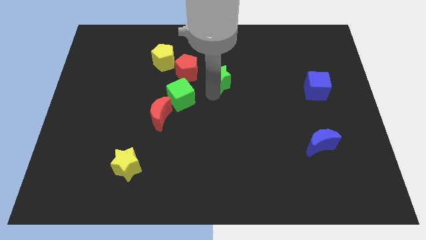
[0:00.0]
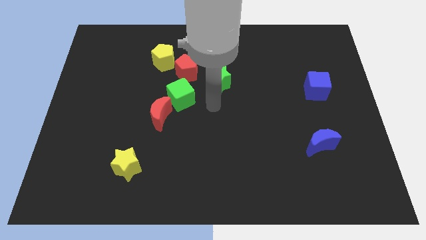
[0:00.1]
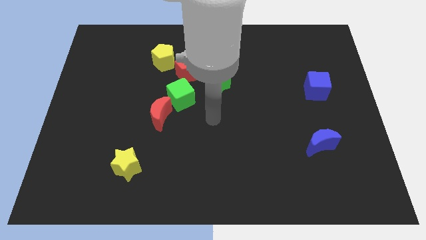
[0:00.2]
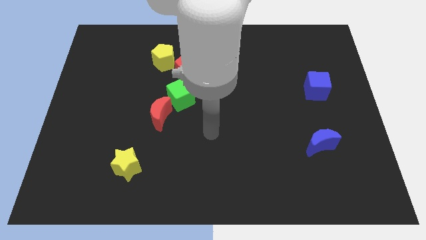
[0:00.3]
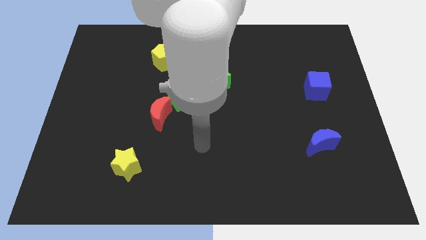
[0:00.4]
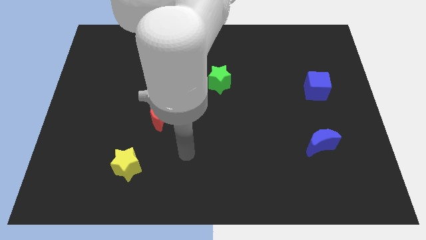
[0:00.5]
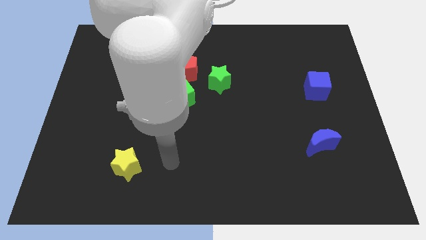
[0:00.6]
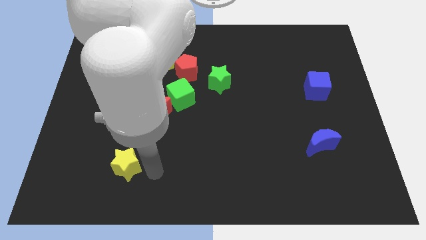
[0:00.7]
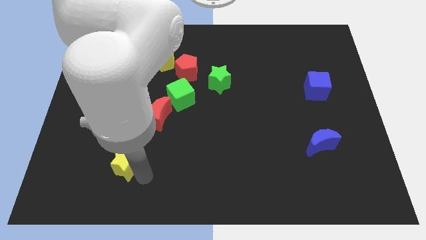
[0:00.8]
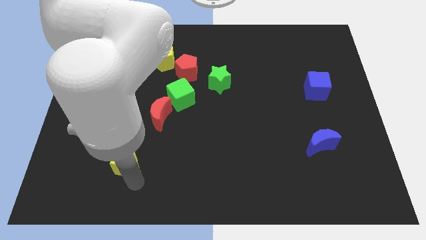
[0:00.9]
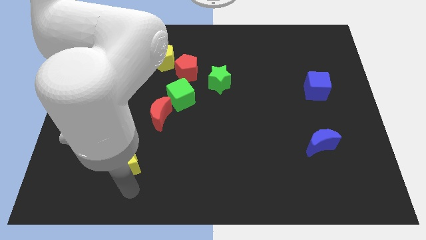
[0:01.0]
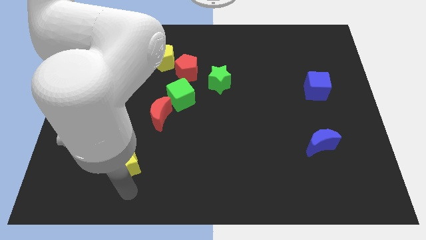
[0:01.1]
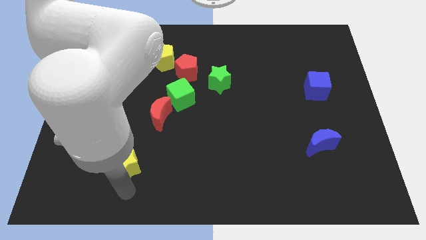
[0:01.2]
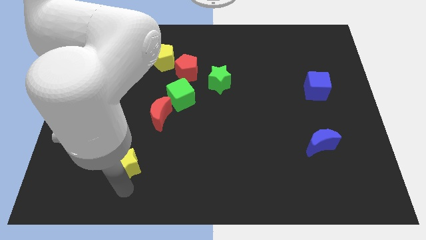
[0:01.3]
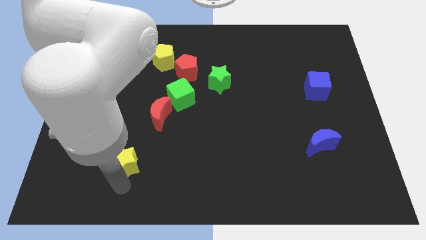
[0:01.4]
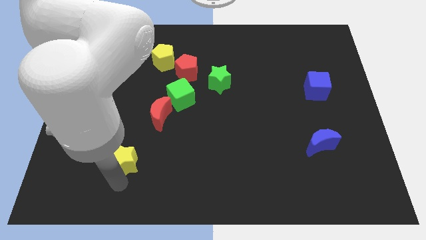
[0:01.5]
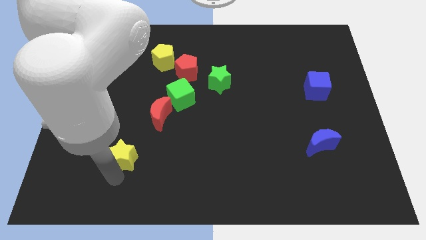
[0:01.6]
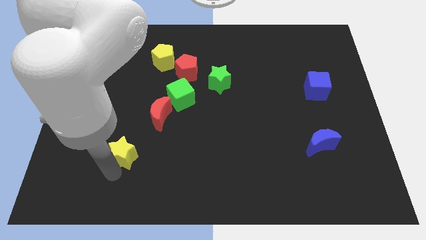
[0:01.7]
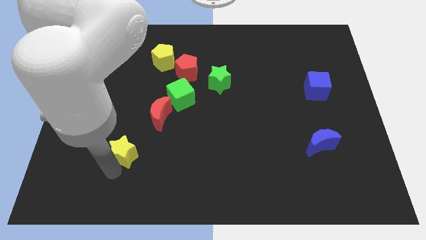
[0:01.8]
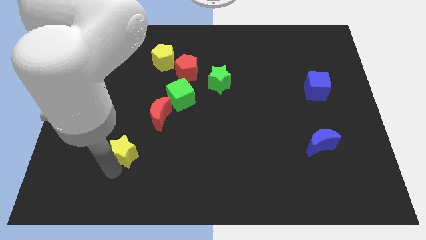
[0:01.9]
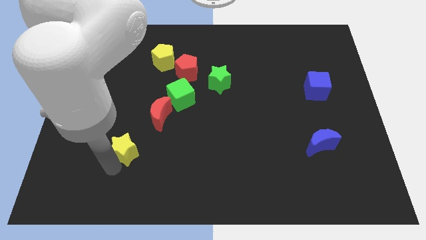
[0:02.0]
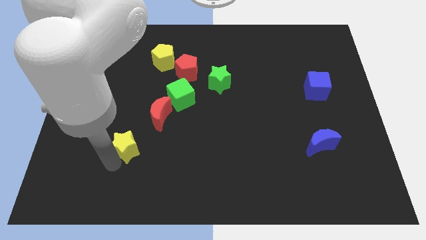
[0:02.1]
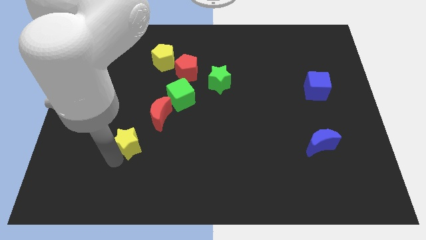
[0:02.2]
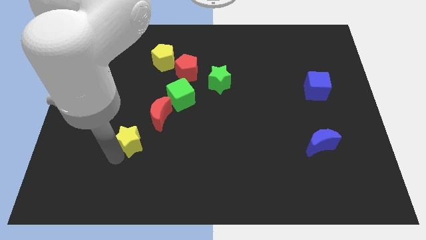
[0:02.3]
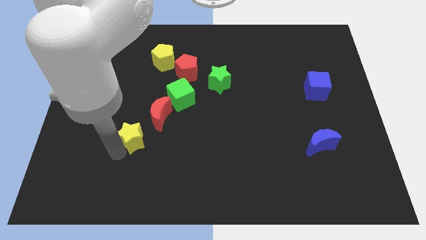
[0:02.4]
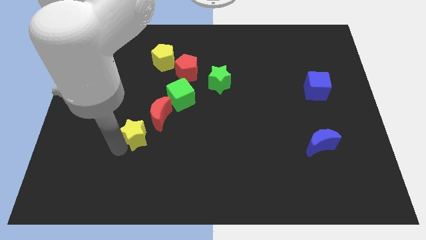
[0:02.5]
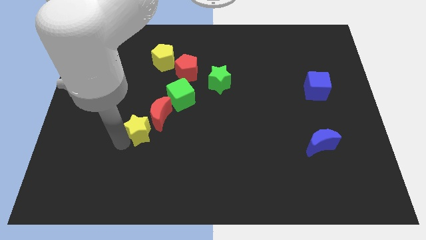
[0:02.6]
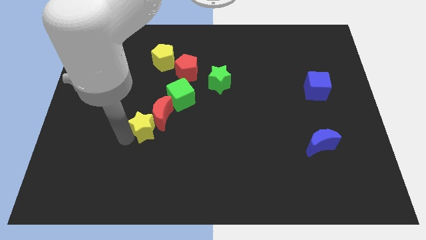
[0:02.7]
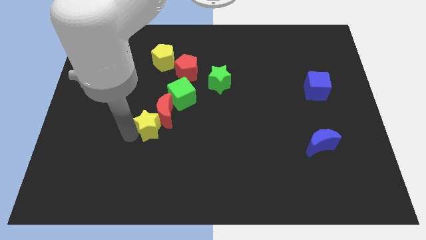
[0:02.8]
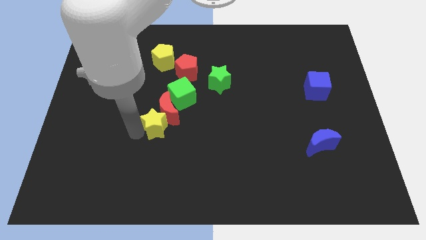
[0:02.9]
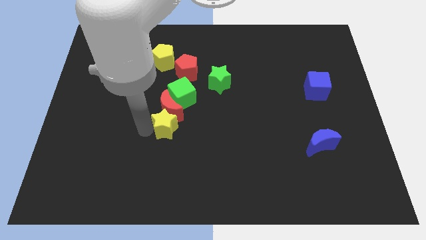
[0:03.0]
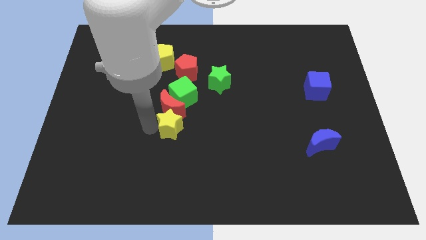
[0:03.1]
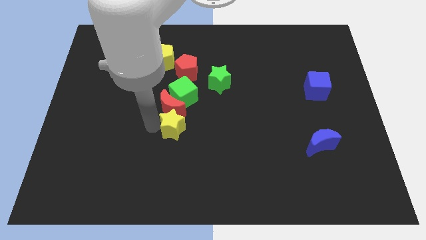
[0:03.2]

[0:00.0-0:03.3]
push the yellow star into the red crescent

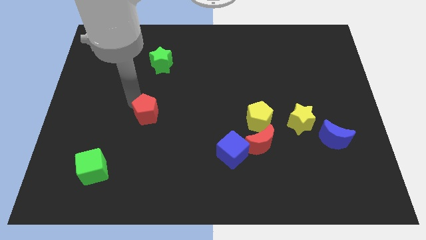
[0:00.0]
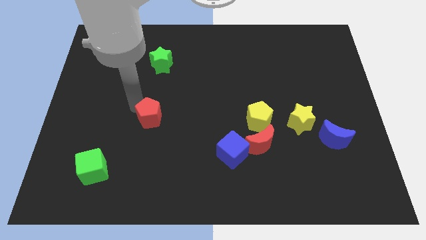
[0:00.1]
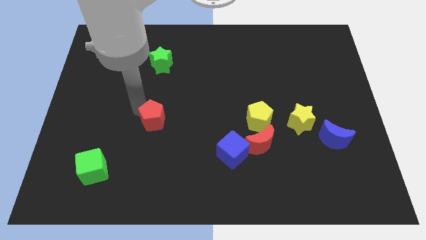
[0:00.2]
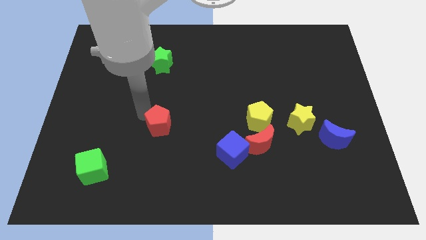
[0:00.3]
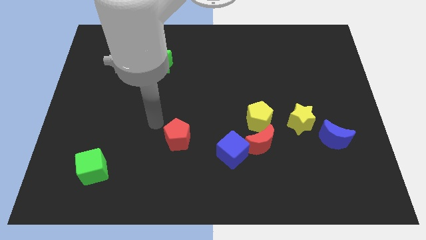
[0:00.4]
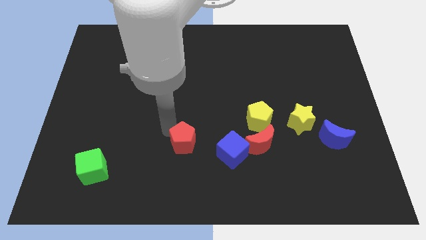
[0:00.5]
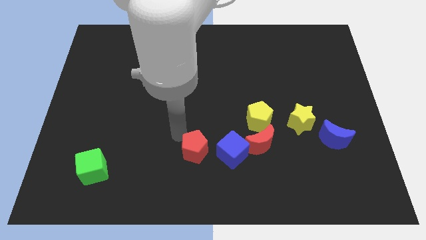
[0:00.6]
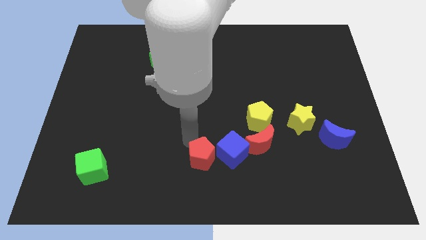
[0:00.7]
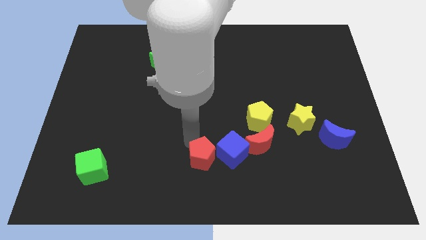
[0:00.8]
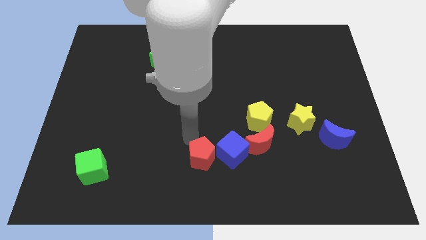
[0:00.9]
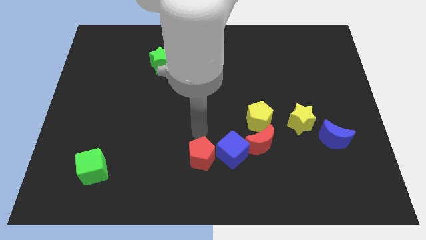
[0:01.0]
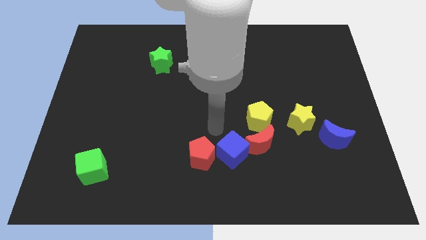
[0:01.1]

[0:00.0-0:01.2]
push red pentagon close to blue cube

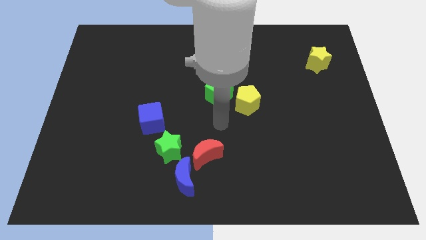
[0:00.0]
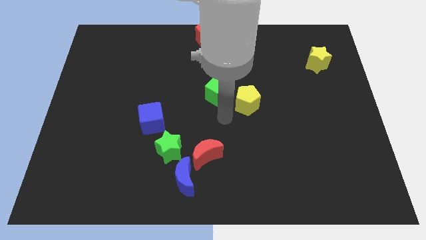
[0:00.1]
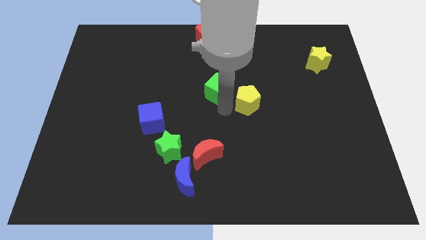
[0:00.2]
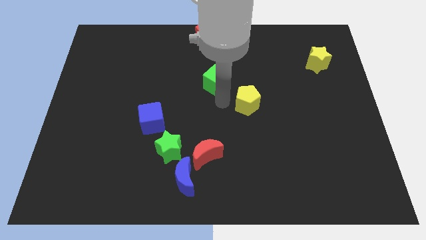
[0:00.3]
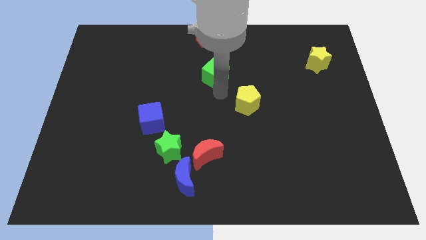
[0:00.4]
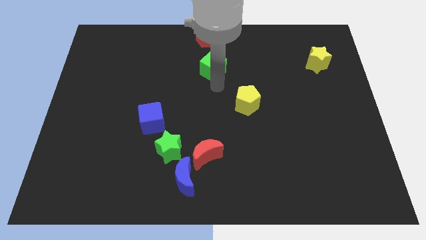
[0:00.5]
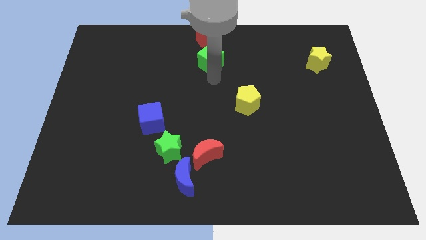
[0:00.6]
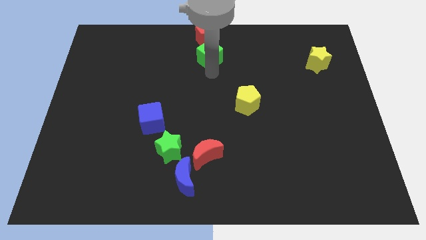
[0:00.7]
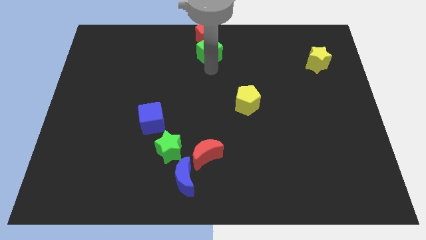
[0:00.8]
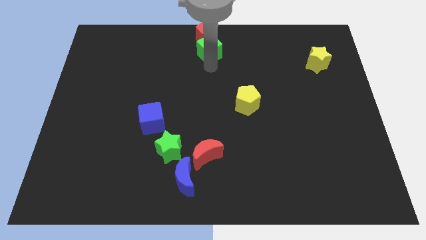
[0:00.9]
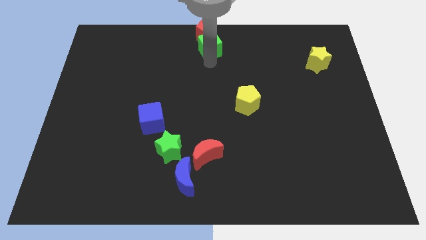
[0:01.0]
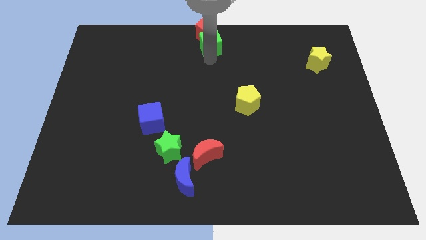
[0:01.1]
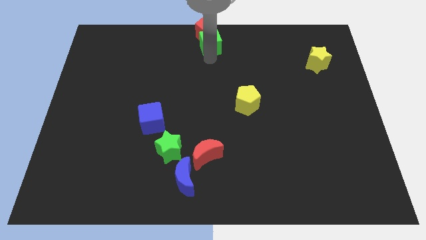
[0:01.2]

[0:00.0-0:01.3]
move the green cube into the red pentagon

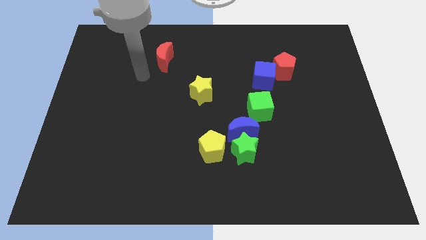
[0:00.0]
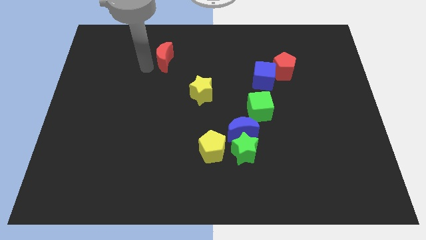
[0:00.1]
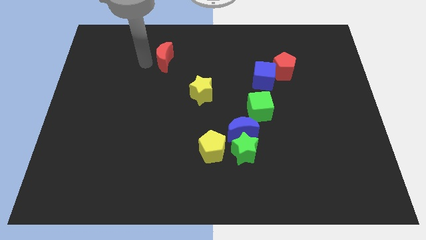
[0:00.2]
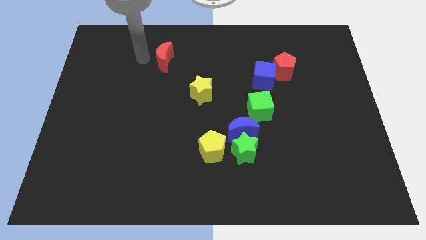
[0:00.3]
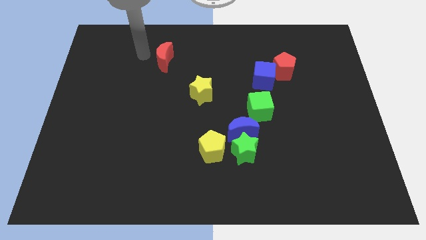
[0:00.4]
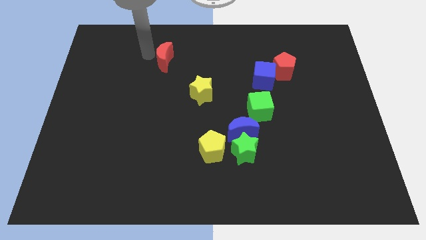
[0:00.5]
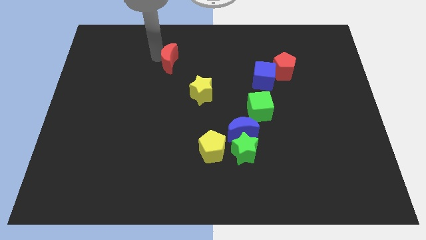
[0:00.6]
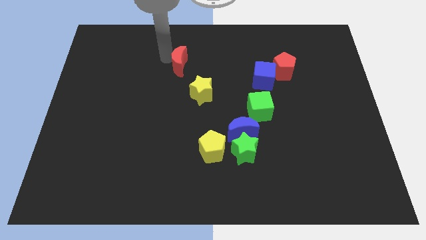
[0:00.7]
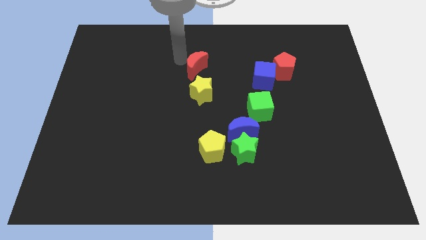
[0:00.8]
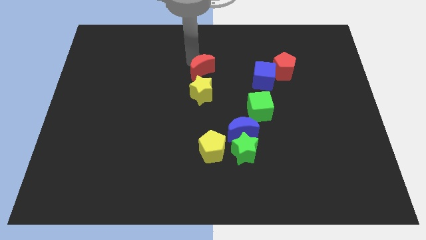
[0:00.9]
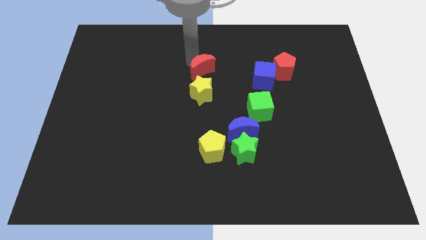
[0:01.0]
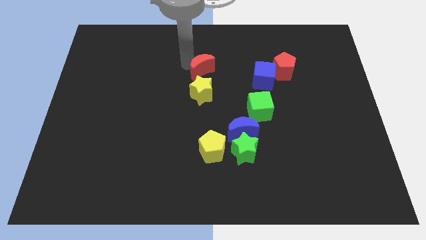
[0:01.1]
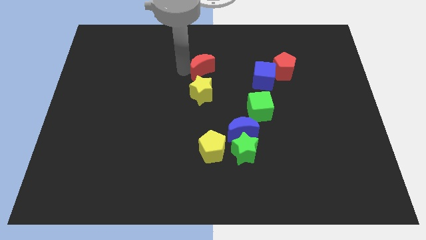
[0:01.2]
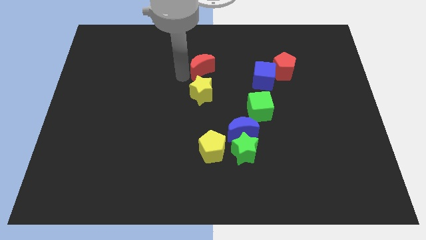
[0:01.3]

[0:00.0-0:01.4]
push the red crescent to the top of the yellow star

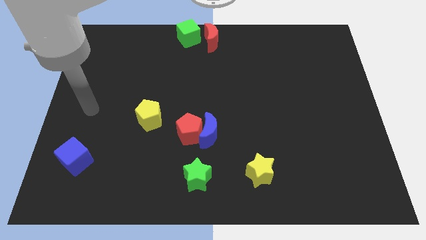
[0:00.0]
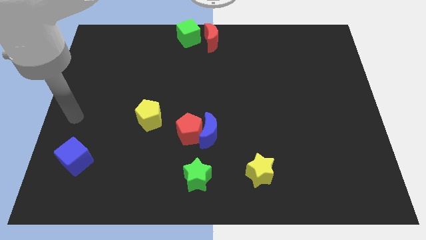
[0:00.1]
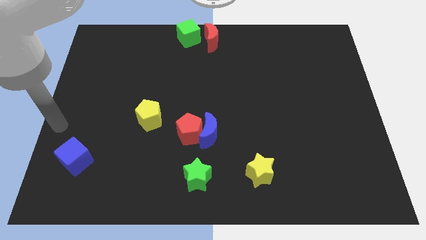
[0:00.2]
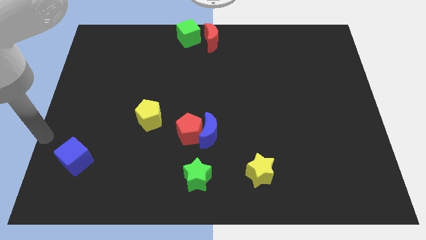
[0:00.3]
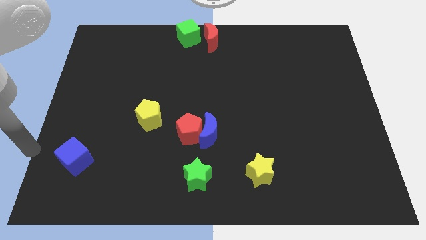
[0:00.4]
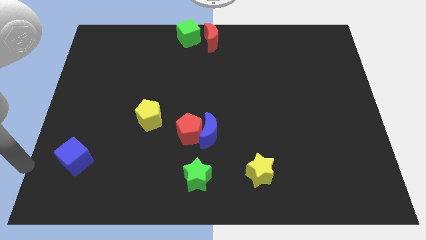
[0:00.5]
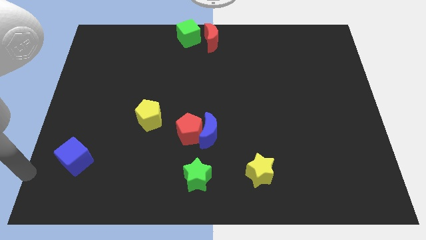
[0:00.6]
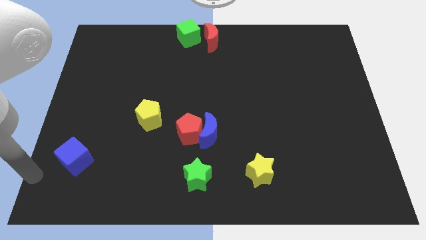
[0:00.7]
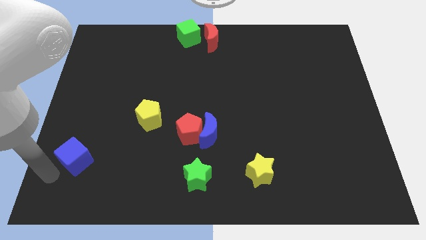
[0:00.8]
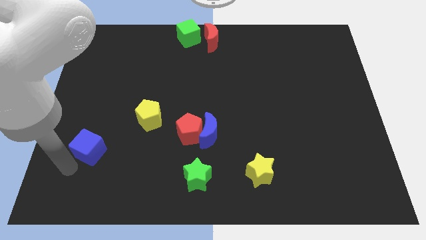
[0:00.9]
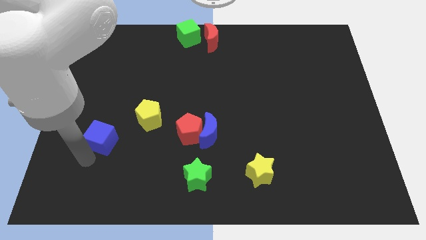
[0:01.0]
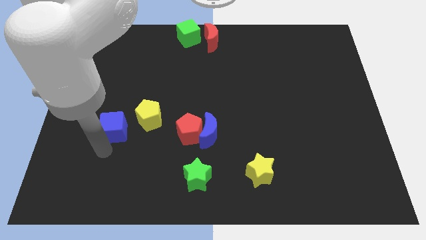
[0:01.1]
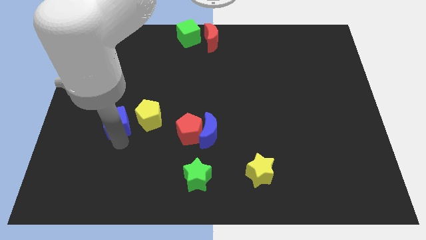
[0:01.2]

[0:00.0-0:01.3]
bring the blue cube near to the left side of the yellow pentagon

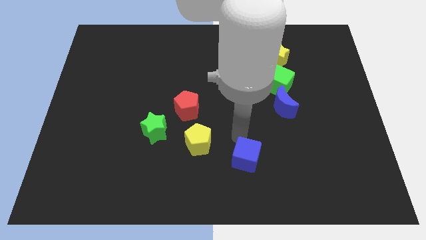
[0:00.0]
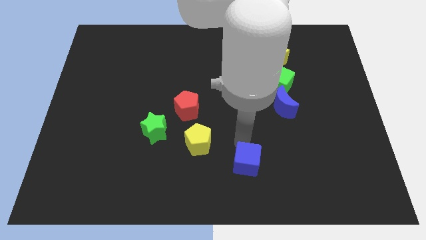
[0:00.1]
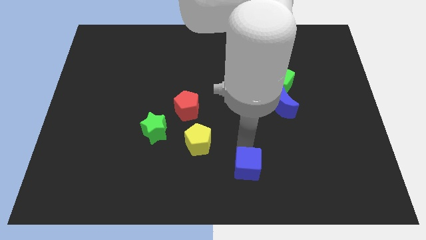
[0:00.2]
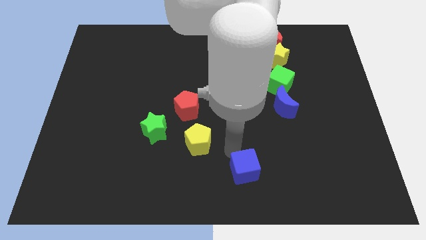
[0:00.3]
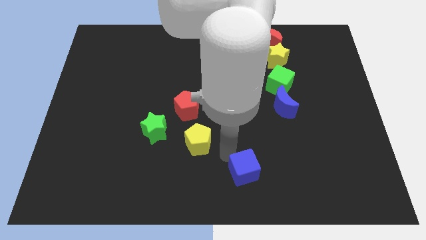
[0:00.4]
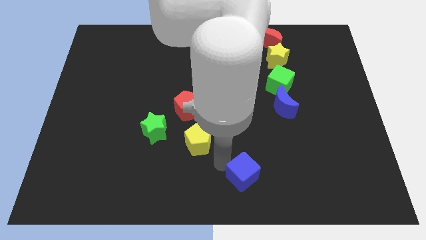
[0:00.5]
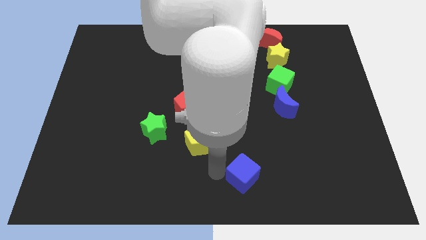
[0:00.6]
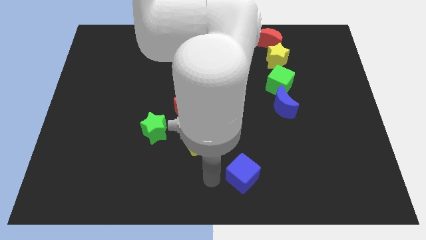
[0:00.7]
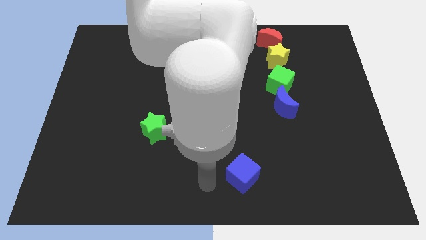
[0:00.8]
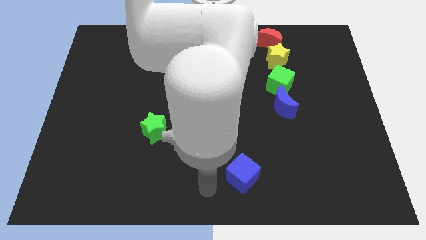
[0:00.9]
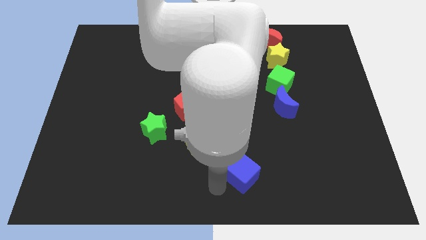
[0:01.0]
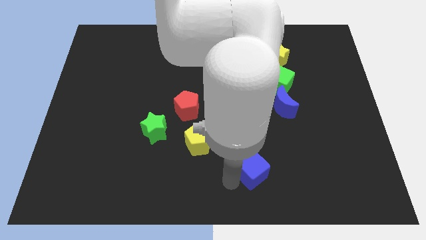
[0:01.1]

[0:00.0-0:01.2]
push the blue cube to the bottom of the board
